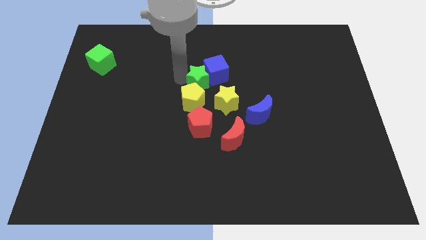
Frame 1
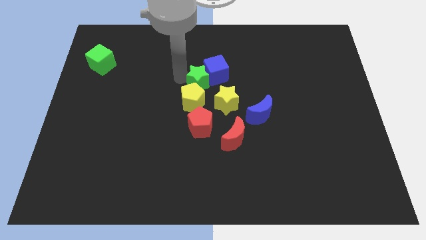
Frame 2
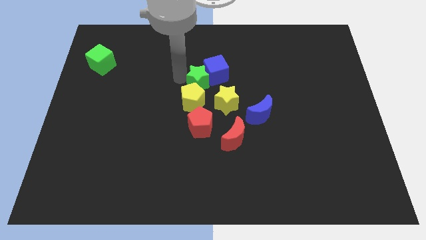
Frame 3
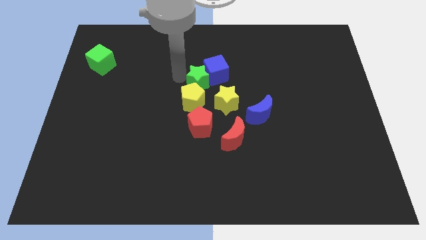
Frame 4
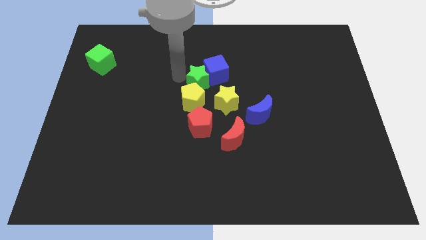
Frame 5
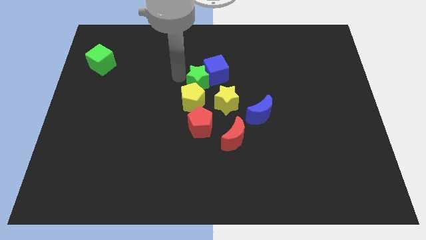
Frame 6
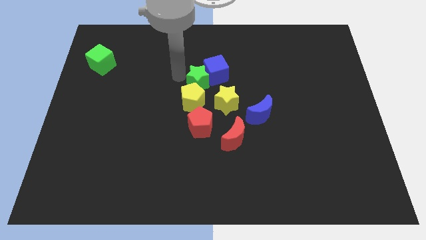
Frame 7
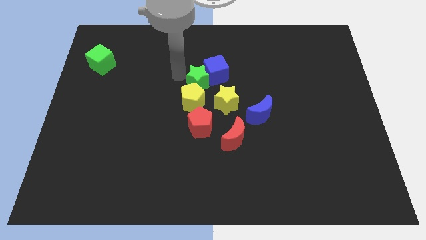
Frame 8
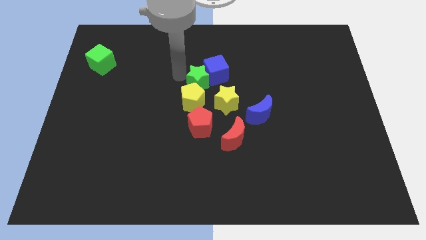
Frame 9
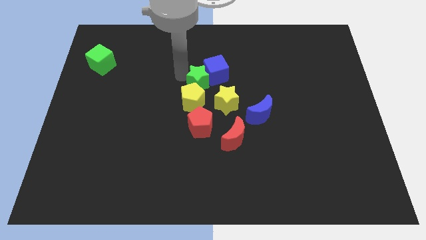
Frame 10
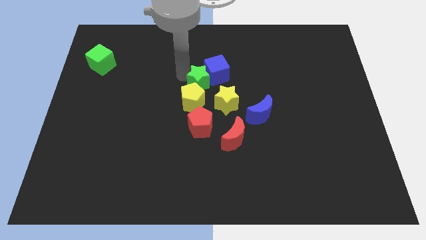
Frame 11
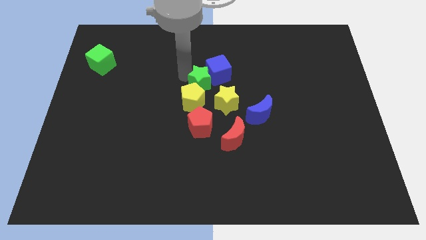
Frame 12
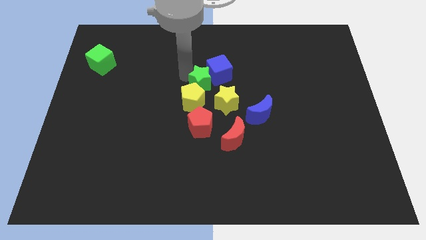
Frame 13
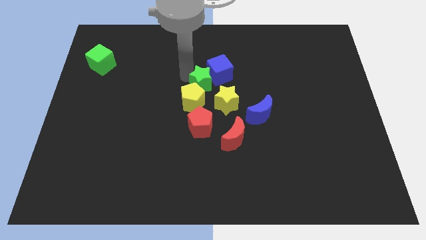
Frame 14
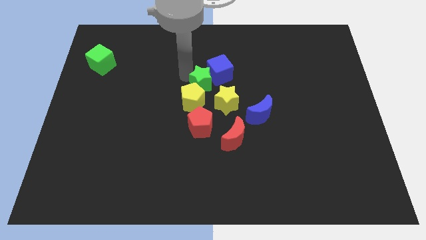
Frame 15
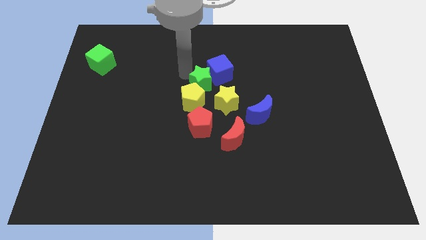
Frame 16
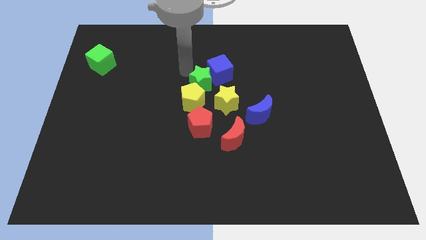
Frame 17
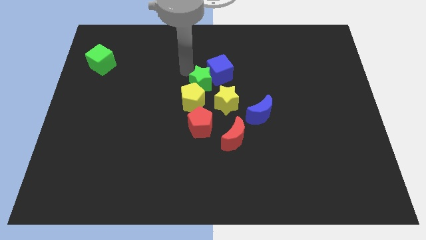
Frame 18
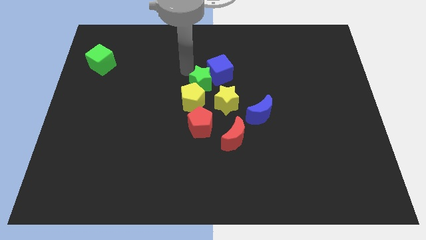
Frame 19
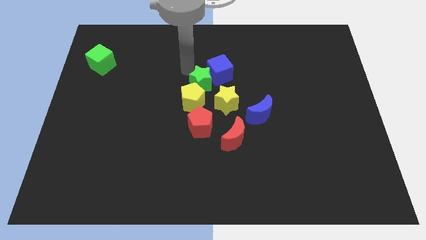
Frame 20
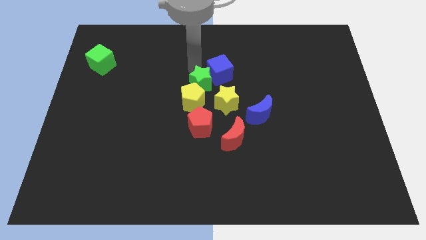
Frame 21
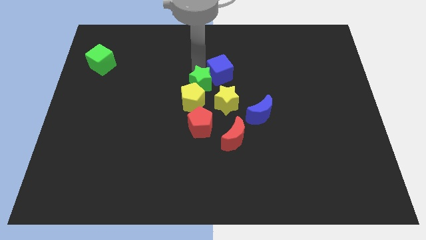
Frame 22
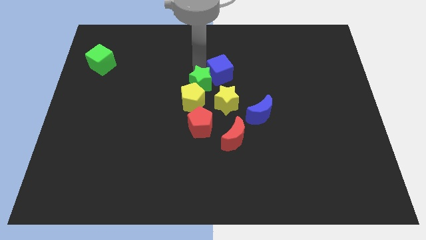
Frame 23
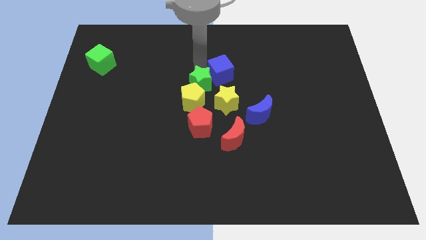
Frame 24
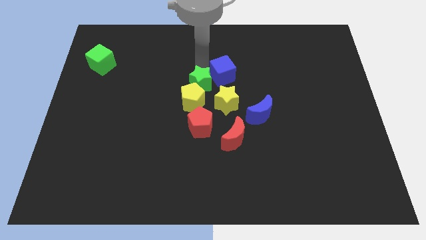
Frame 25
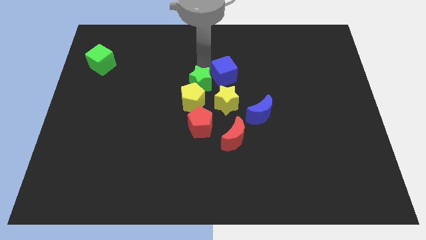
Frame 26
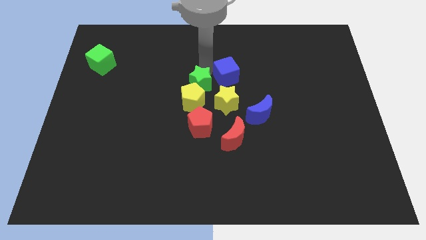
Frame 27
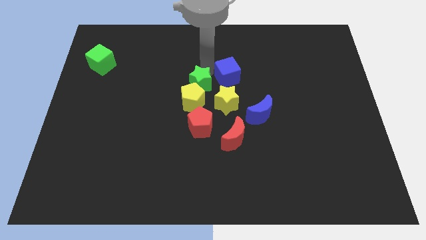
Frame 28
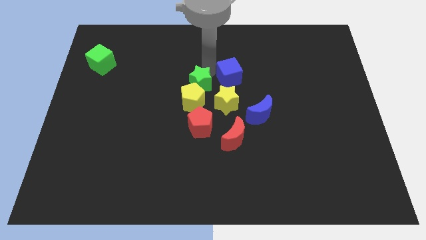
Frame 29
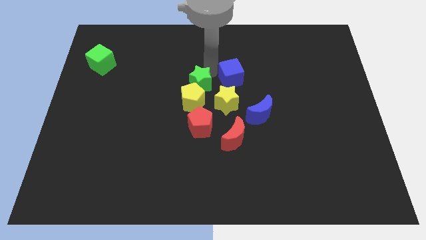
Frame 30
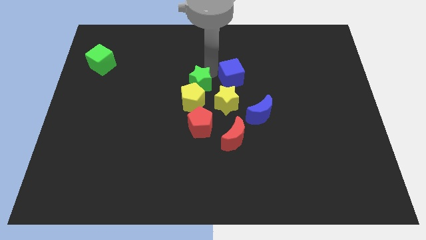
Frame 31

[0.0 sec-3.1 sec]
separate the blue cube and green star slightly

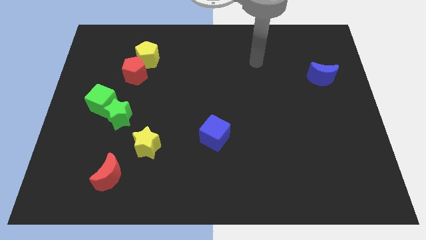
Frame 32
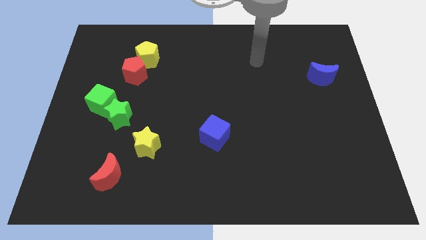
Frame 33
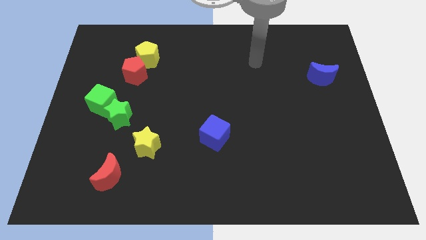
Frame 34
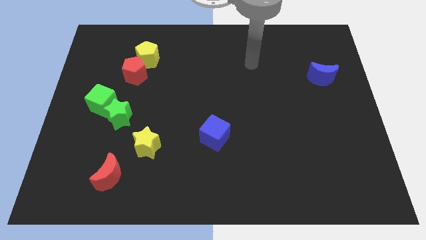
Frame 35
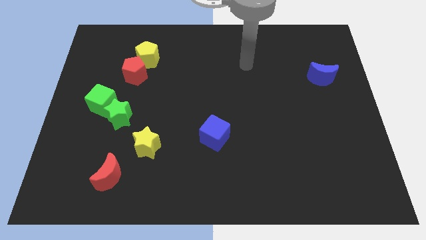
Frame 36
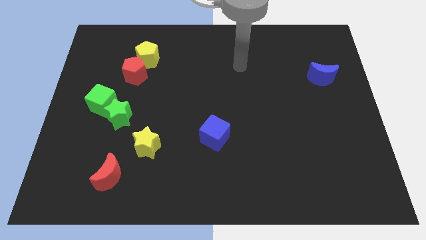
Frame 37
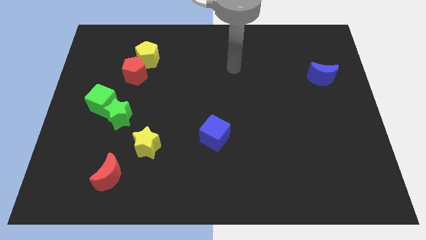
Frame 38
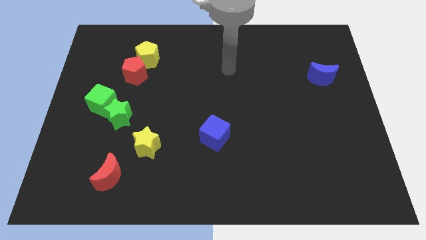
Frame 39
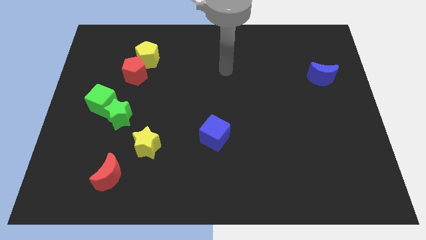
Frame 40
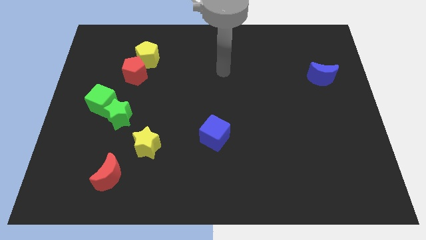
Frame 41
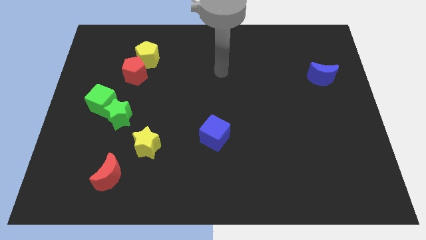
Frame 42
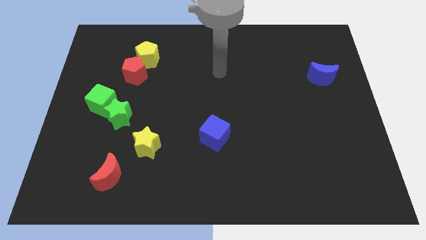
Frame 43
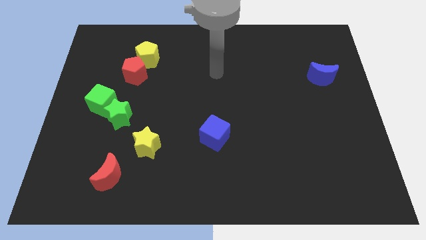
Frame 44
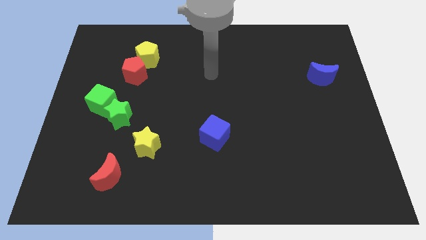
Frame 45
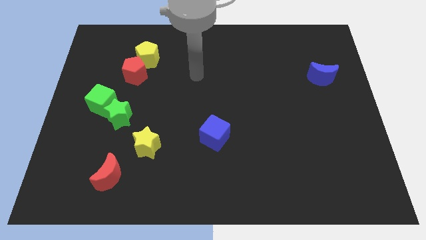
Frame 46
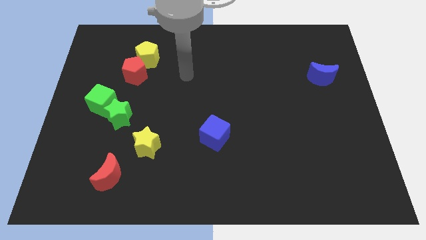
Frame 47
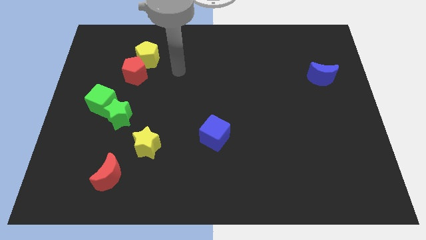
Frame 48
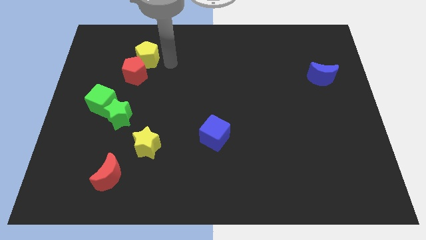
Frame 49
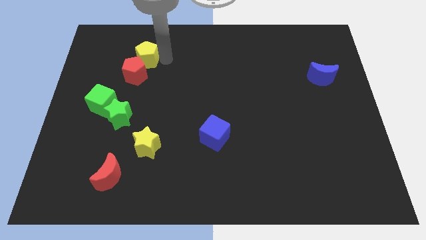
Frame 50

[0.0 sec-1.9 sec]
point your arm at the right of the yellow pentagon

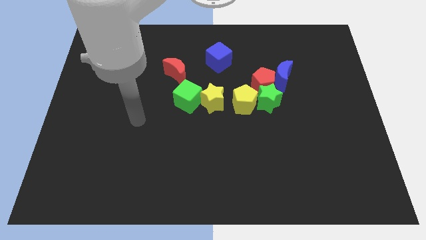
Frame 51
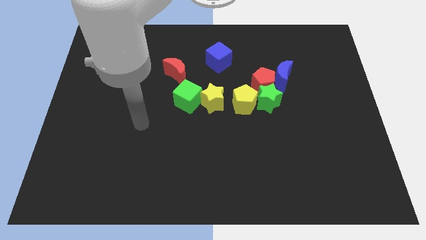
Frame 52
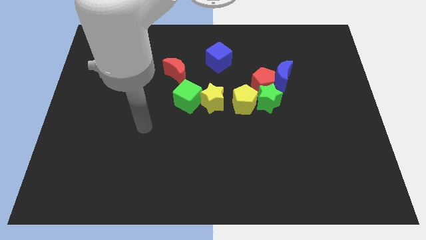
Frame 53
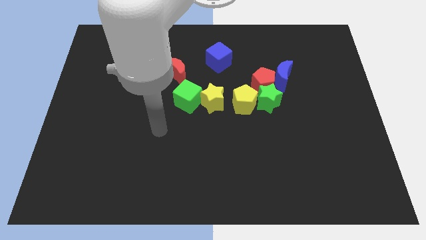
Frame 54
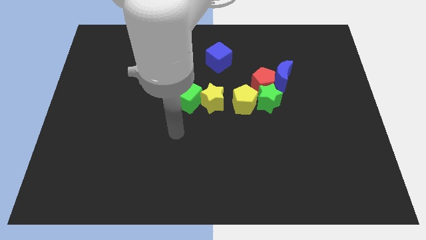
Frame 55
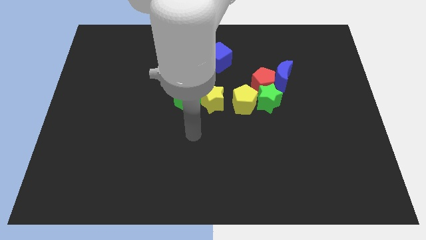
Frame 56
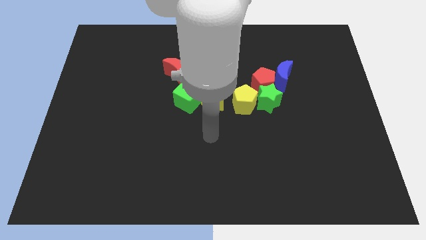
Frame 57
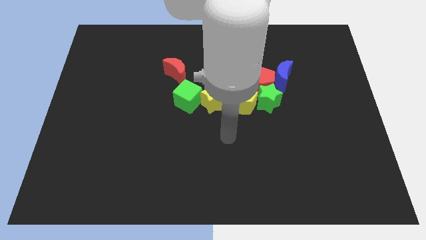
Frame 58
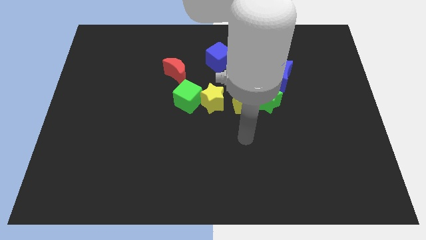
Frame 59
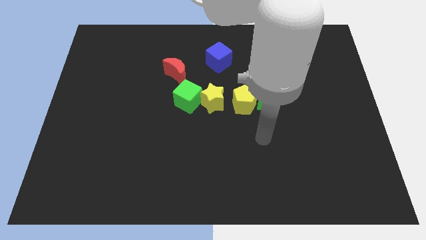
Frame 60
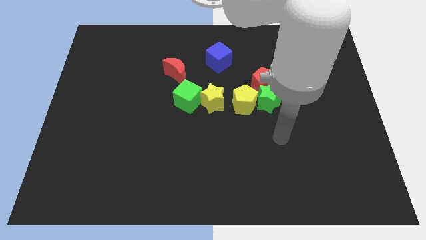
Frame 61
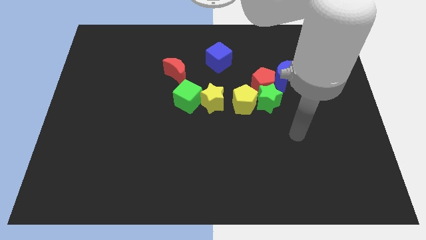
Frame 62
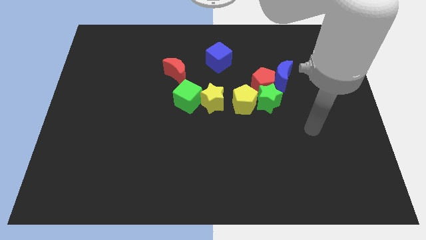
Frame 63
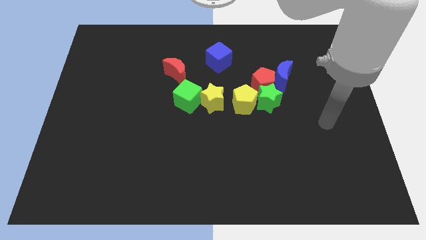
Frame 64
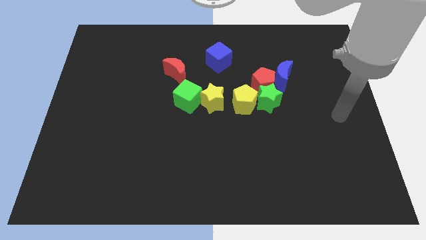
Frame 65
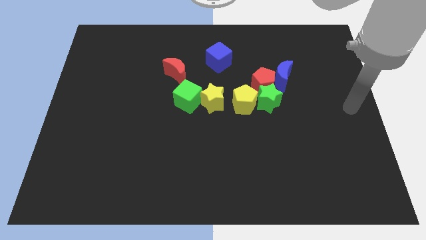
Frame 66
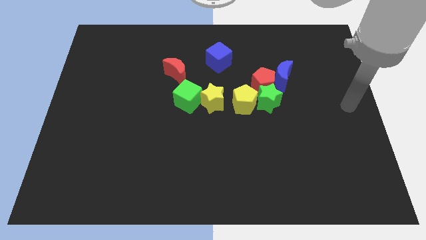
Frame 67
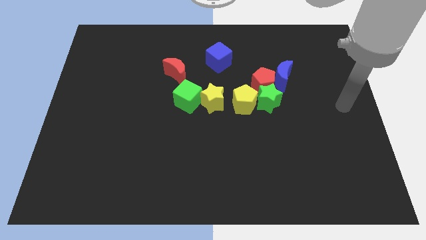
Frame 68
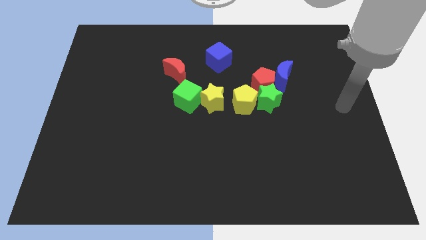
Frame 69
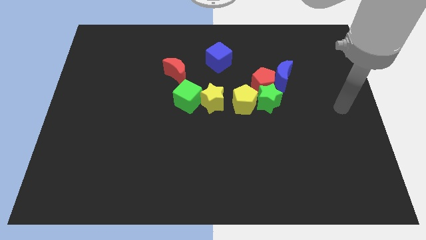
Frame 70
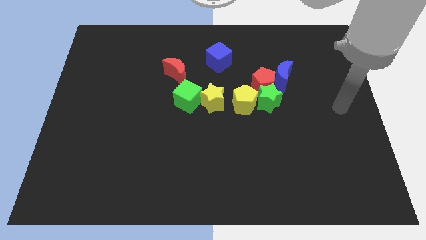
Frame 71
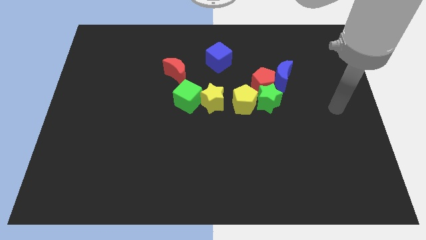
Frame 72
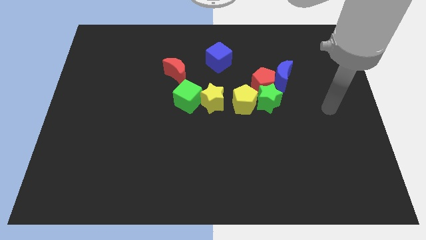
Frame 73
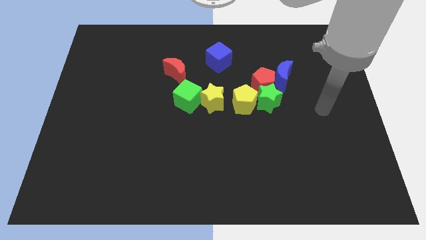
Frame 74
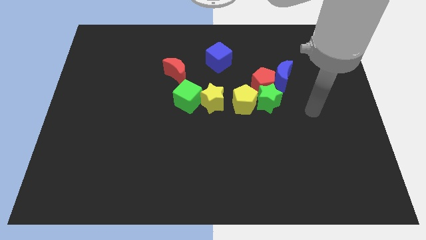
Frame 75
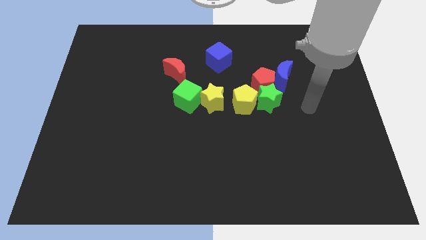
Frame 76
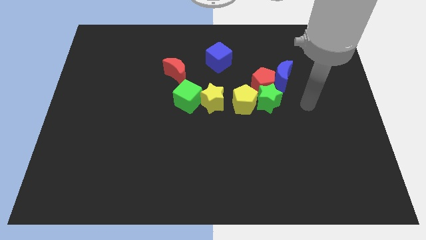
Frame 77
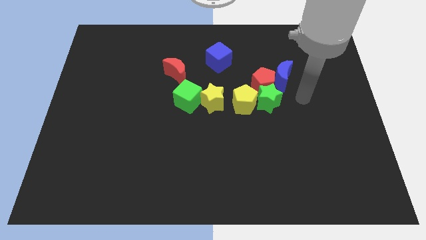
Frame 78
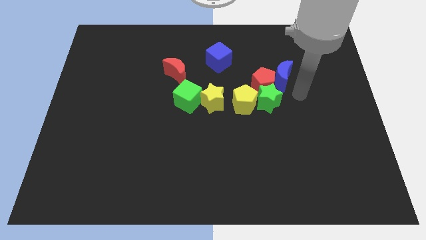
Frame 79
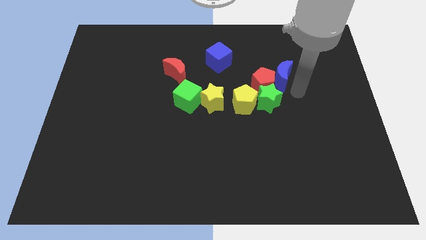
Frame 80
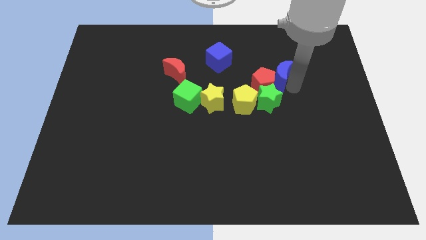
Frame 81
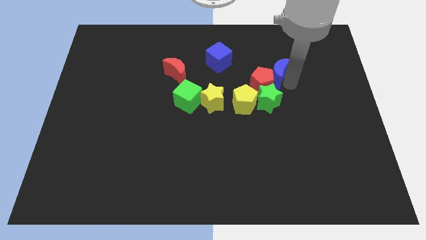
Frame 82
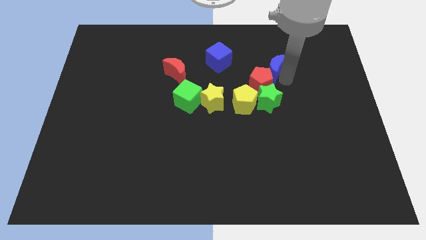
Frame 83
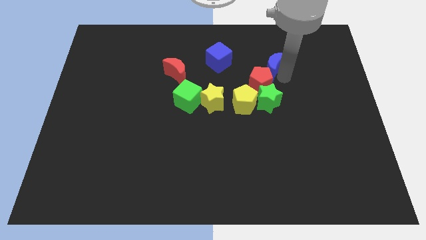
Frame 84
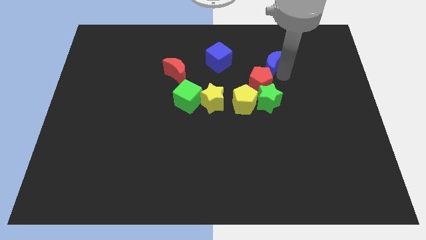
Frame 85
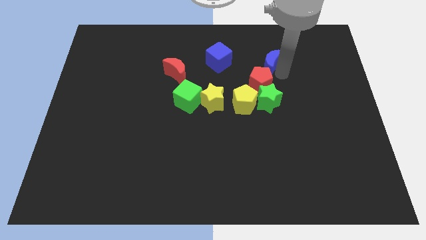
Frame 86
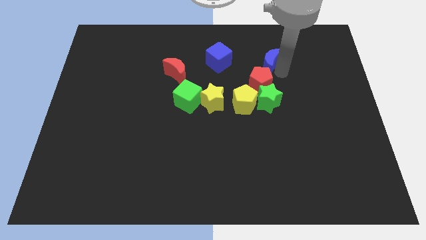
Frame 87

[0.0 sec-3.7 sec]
push the blue crescent towards the blue cube

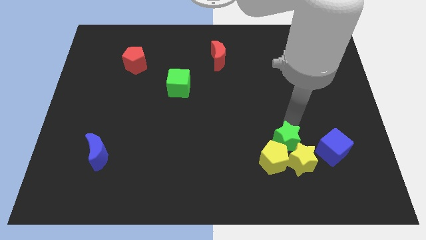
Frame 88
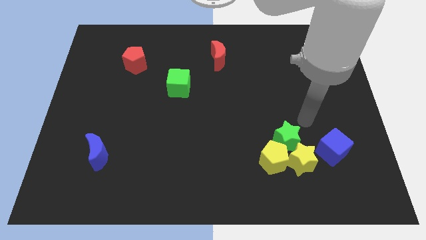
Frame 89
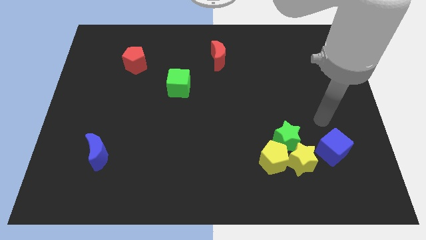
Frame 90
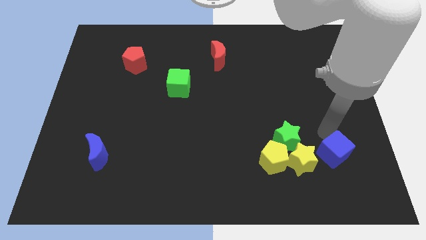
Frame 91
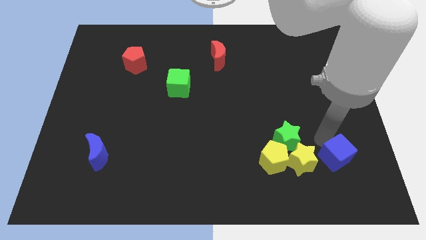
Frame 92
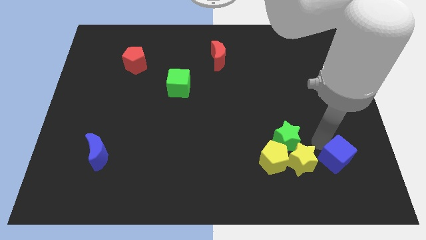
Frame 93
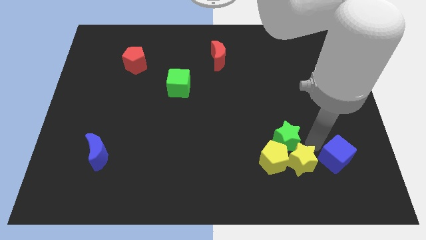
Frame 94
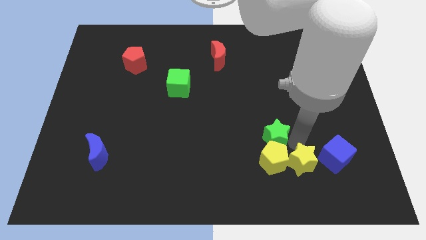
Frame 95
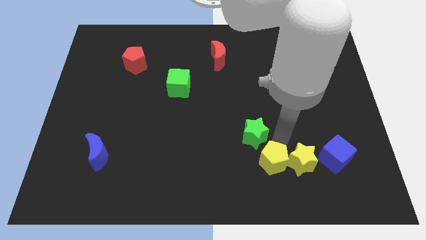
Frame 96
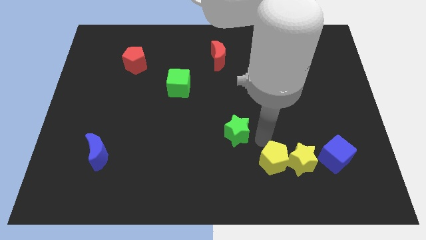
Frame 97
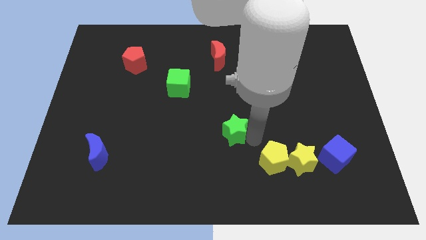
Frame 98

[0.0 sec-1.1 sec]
put the green star diagonally bottom right to green cube
